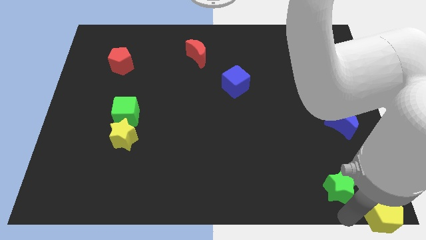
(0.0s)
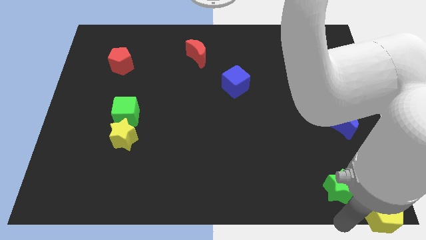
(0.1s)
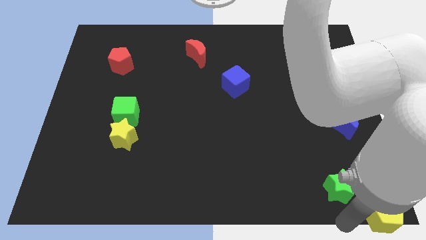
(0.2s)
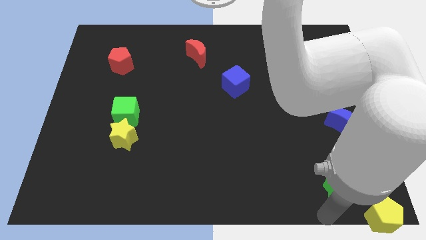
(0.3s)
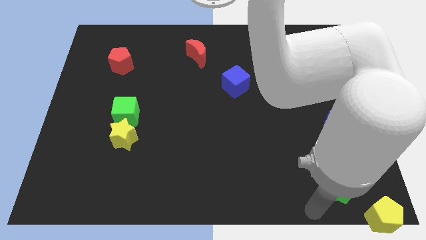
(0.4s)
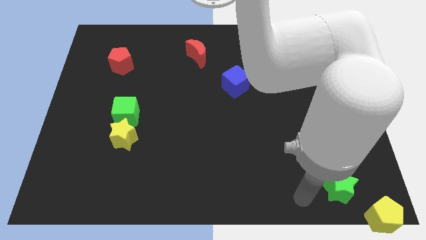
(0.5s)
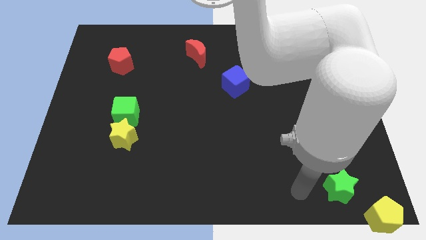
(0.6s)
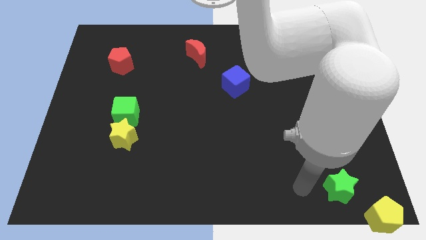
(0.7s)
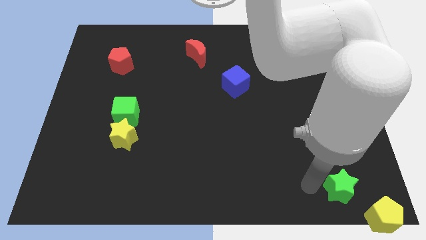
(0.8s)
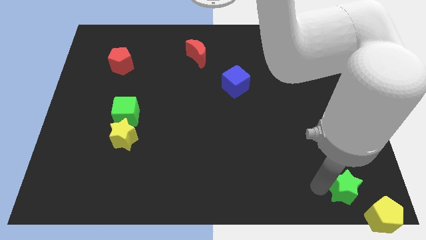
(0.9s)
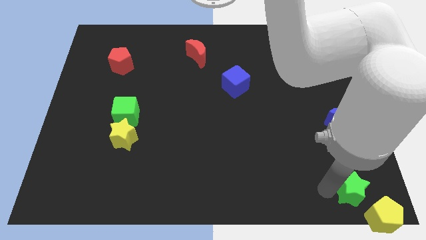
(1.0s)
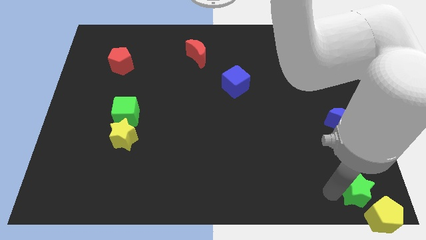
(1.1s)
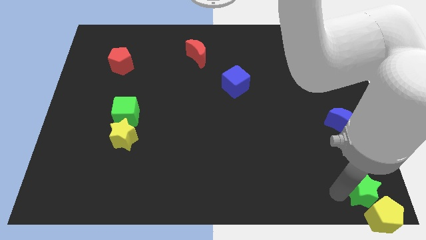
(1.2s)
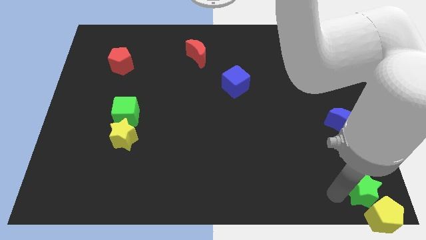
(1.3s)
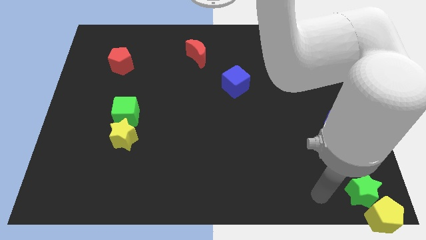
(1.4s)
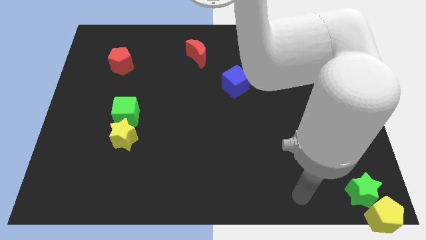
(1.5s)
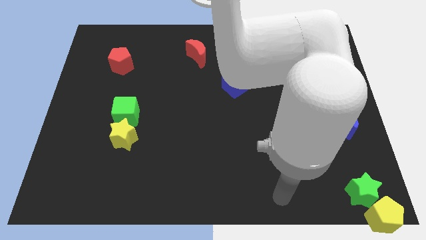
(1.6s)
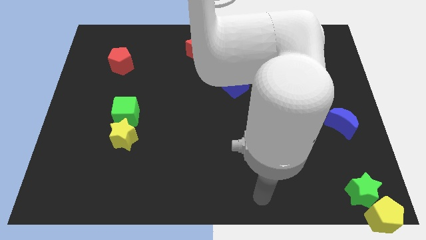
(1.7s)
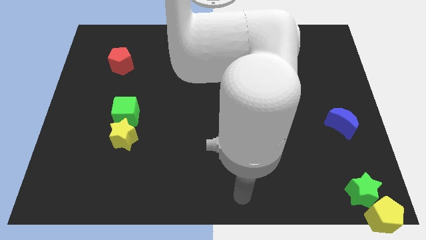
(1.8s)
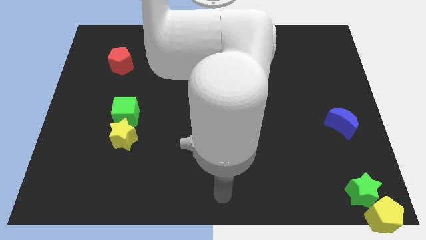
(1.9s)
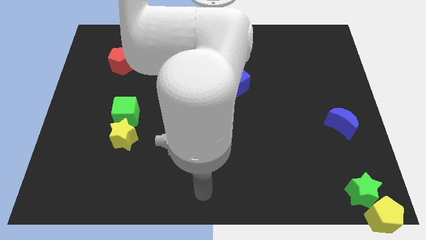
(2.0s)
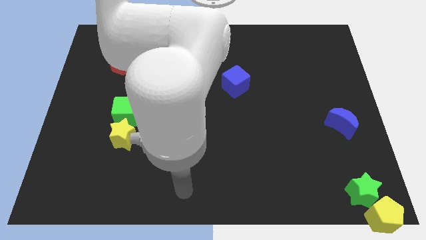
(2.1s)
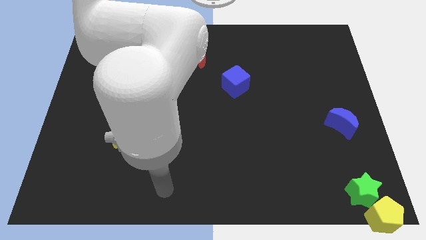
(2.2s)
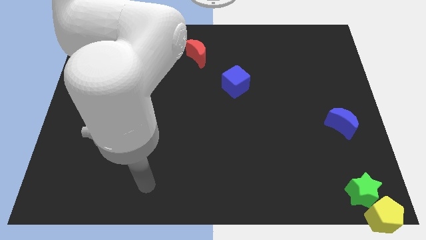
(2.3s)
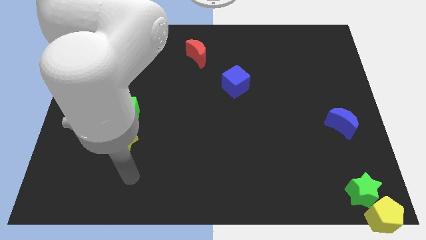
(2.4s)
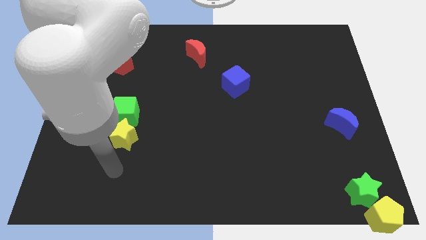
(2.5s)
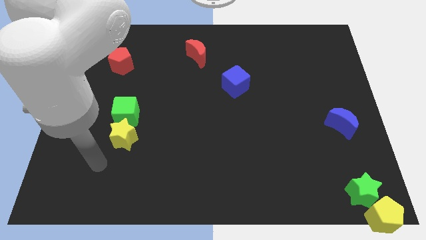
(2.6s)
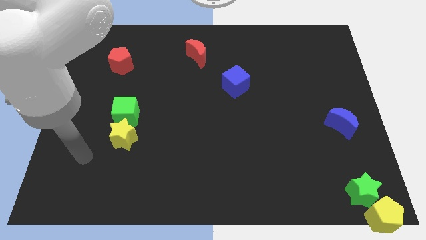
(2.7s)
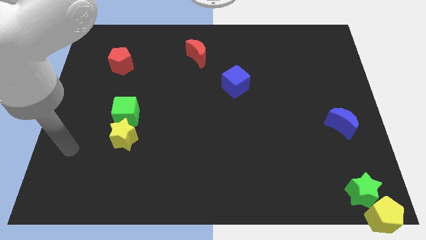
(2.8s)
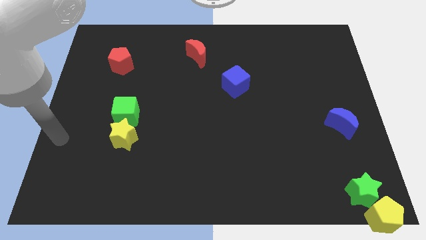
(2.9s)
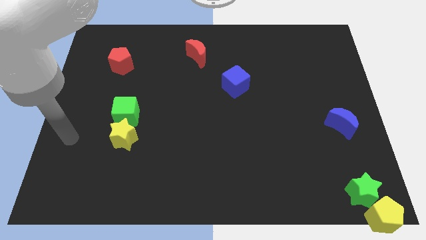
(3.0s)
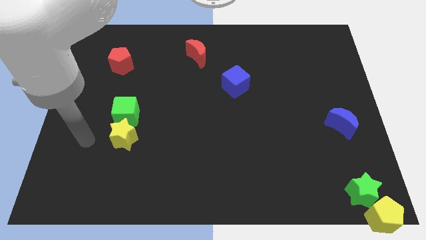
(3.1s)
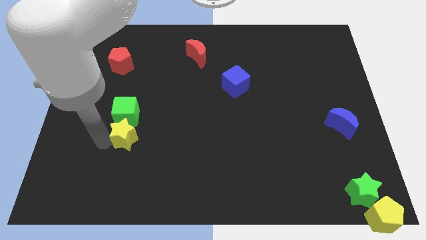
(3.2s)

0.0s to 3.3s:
place green star to the top of yellow pentagon

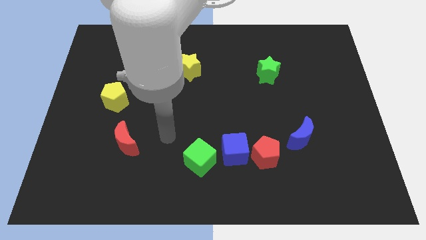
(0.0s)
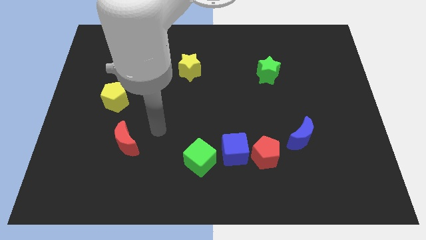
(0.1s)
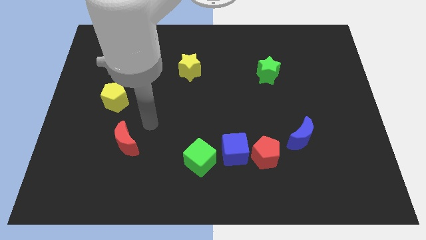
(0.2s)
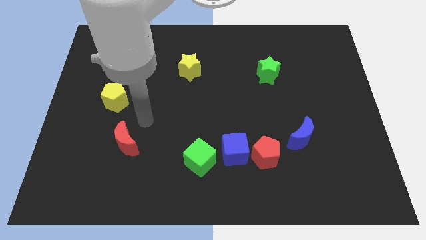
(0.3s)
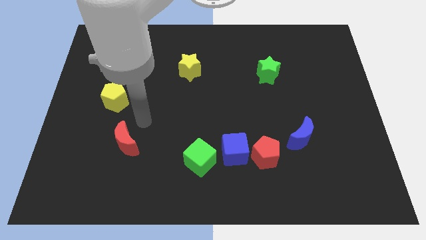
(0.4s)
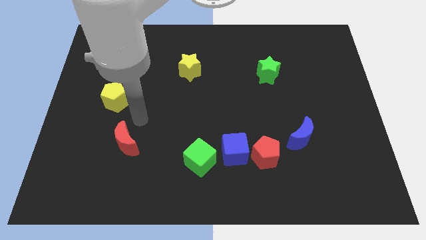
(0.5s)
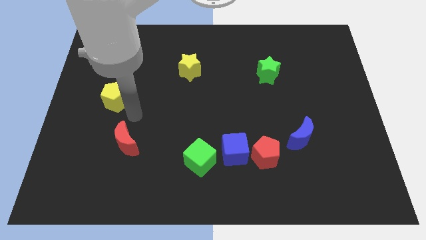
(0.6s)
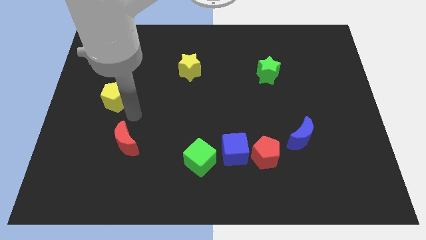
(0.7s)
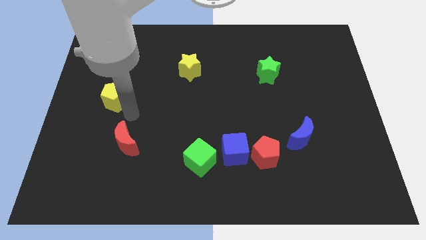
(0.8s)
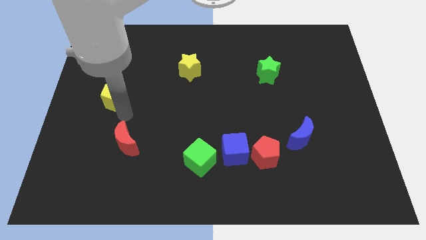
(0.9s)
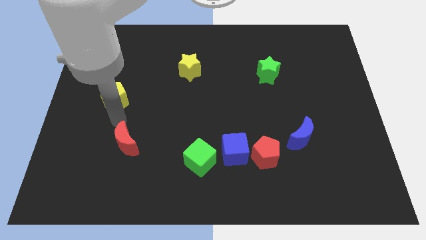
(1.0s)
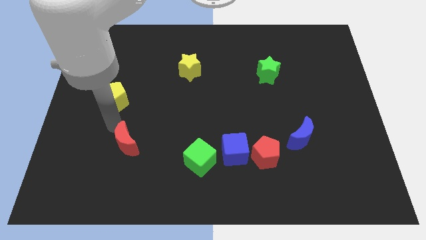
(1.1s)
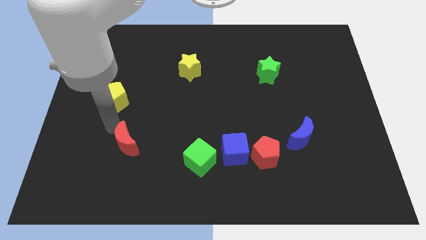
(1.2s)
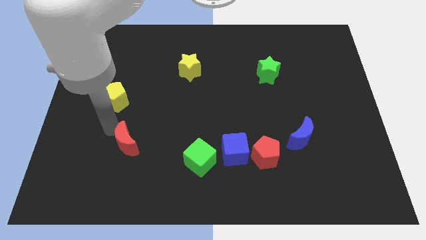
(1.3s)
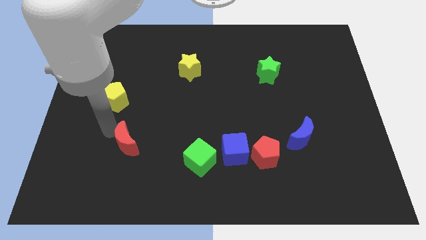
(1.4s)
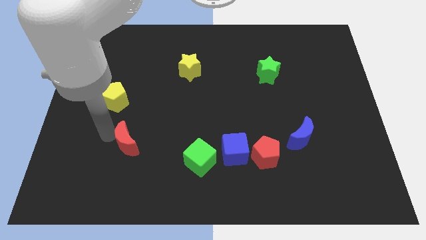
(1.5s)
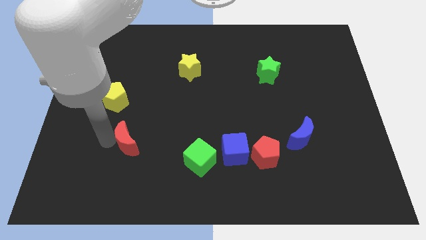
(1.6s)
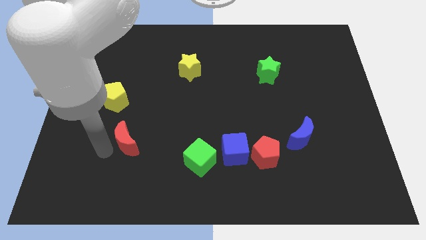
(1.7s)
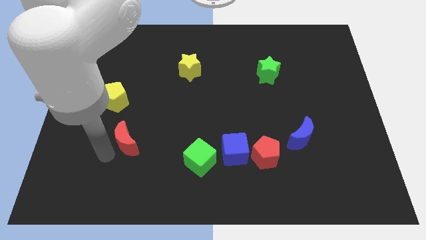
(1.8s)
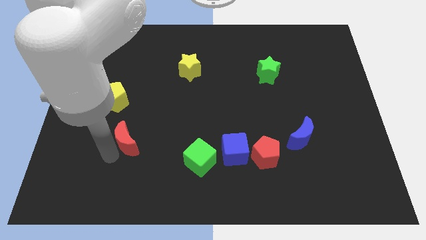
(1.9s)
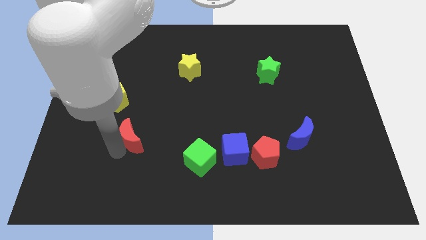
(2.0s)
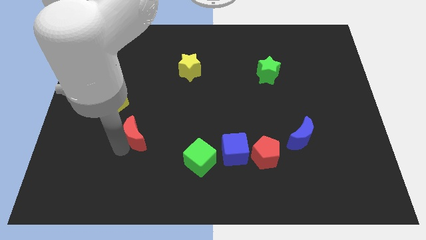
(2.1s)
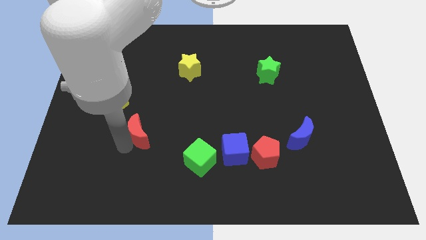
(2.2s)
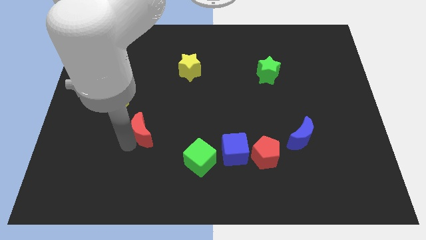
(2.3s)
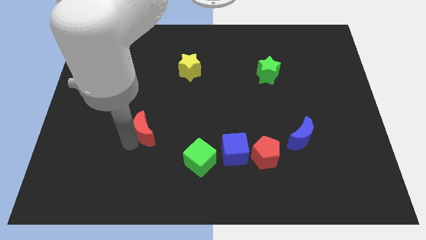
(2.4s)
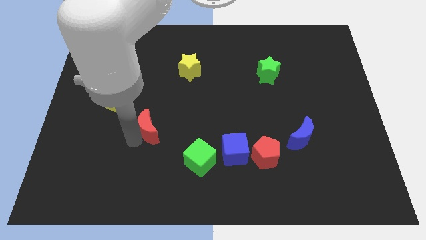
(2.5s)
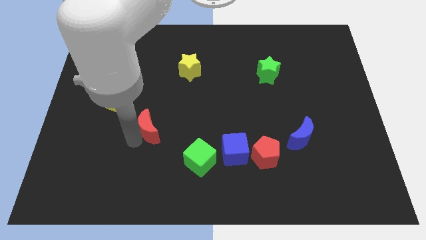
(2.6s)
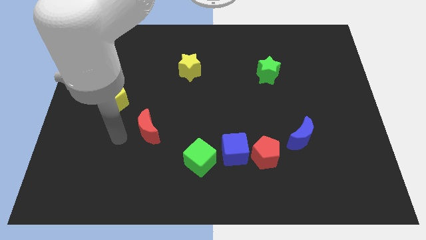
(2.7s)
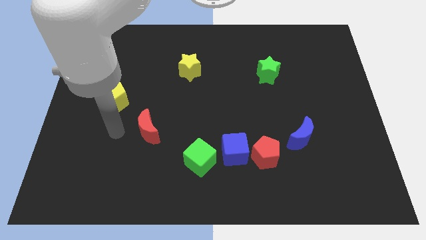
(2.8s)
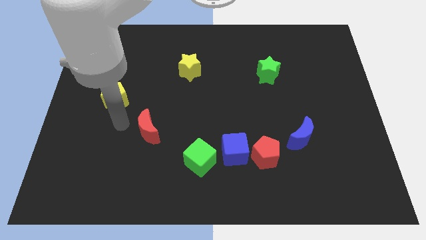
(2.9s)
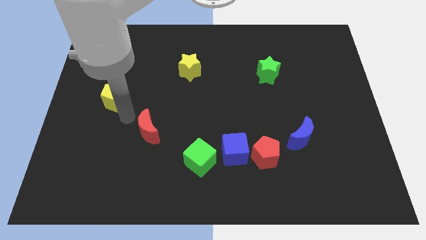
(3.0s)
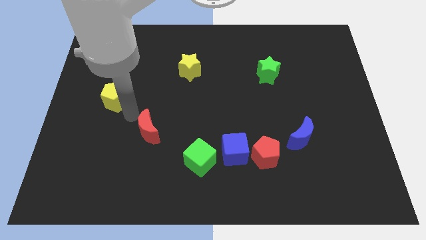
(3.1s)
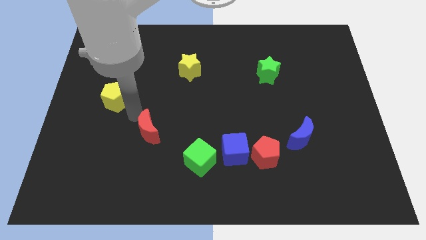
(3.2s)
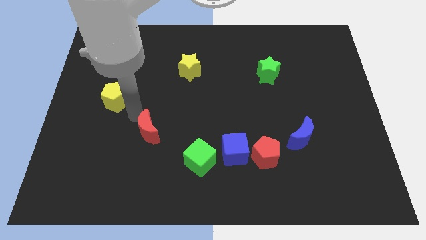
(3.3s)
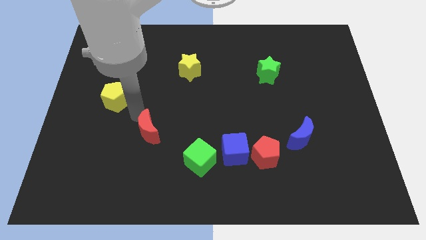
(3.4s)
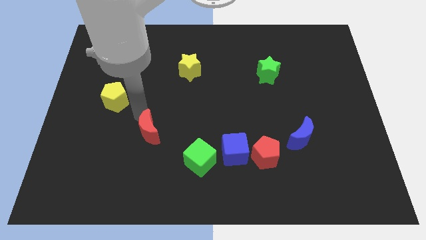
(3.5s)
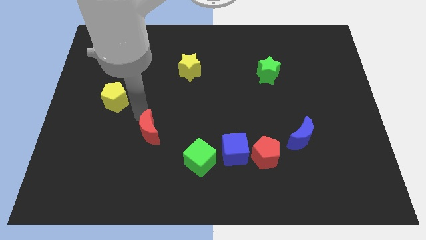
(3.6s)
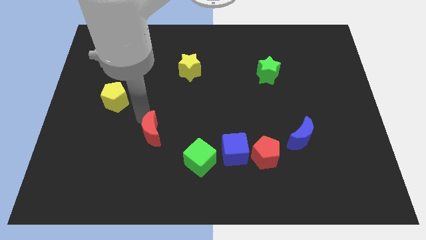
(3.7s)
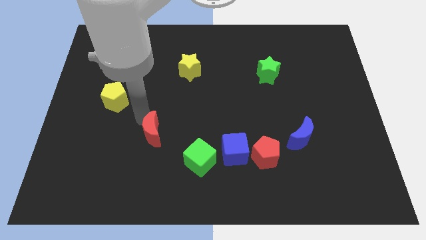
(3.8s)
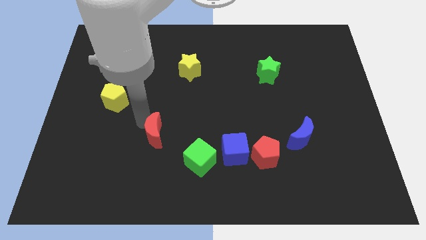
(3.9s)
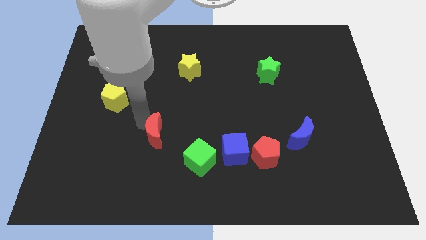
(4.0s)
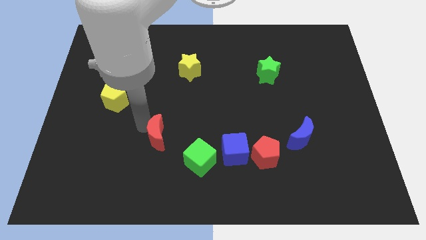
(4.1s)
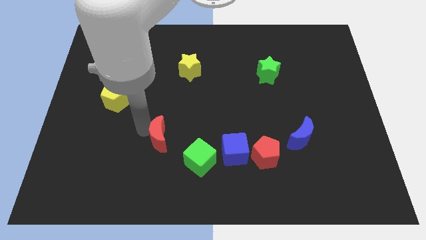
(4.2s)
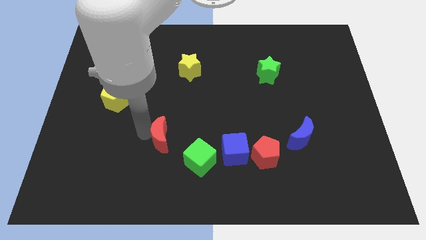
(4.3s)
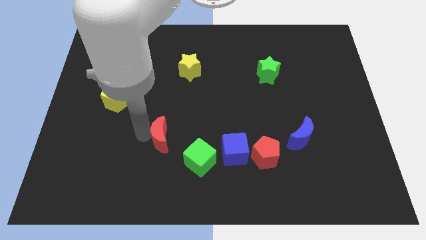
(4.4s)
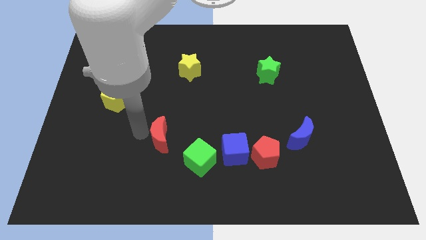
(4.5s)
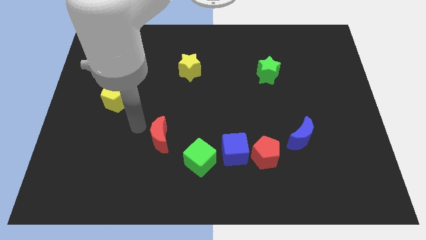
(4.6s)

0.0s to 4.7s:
move the red crescent to the left of the green cube

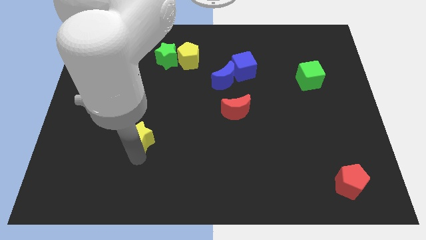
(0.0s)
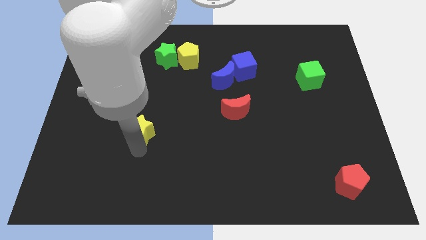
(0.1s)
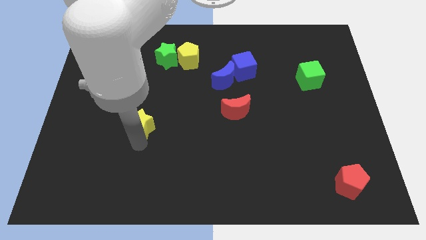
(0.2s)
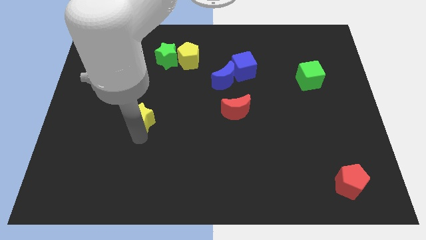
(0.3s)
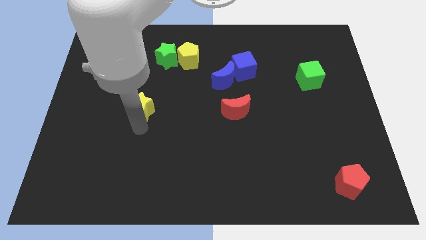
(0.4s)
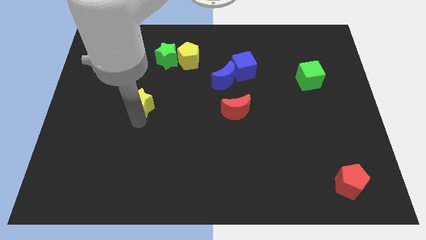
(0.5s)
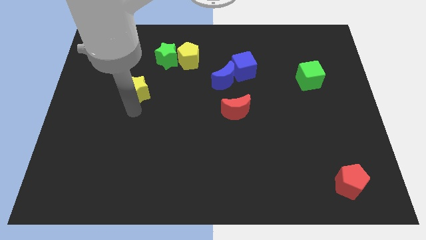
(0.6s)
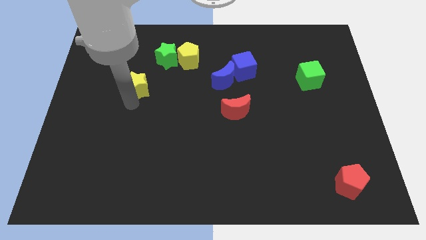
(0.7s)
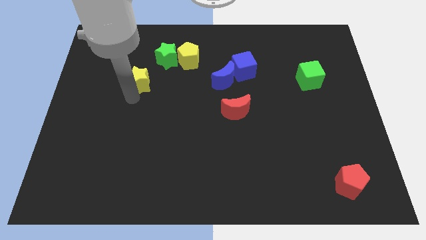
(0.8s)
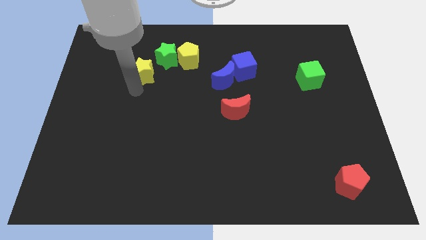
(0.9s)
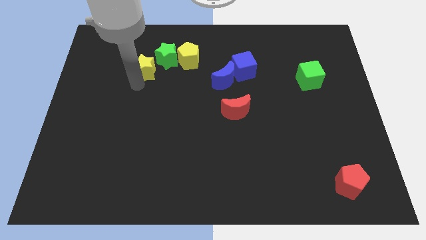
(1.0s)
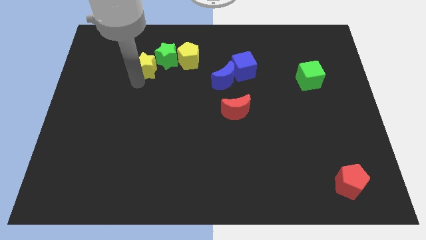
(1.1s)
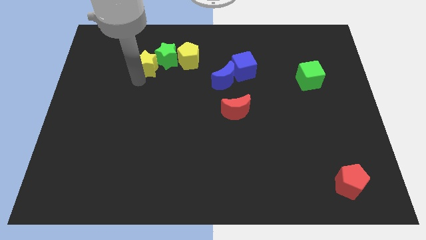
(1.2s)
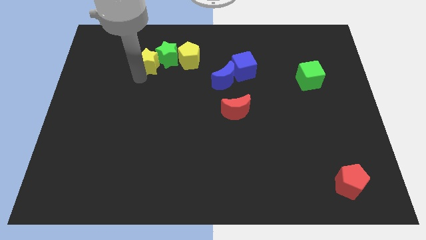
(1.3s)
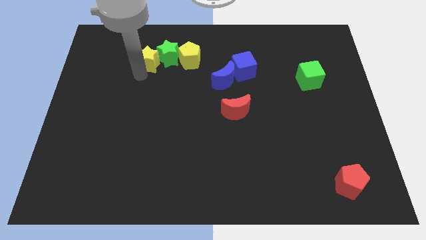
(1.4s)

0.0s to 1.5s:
make the yellow star touch the left side of the green star
